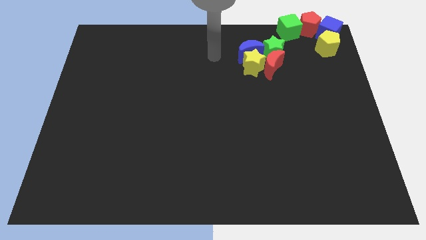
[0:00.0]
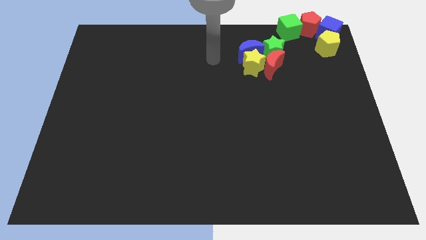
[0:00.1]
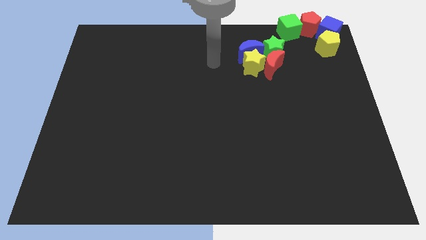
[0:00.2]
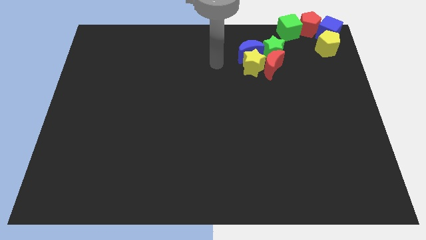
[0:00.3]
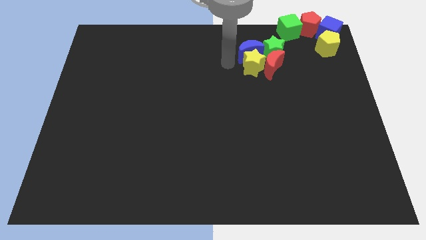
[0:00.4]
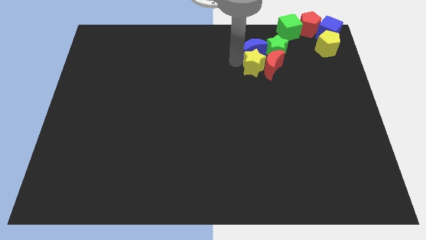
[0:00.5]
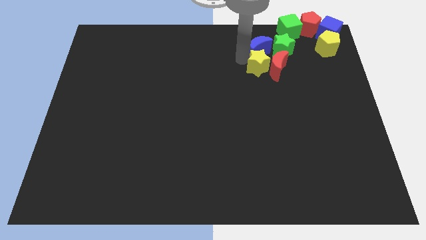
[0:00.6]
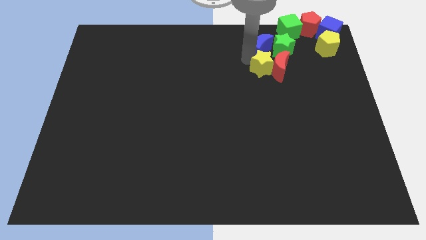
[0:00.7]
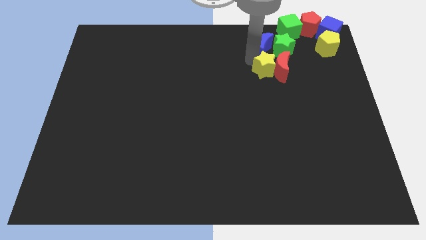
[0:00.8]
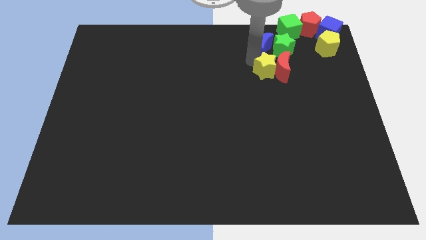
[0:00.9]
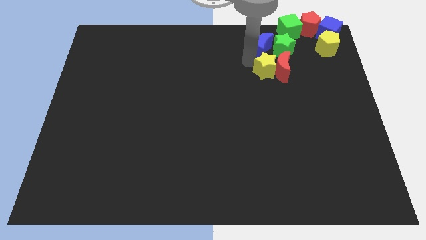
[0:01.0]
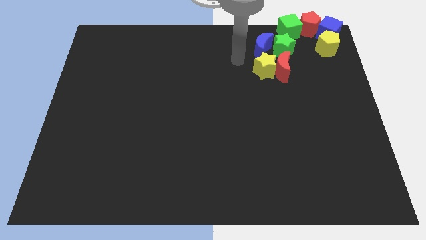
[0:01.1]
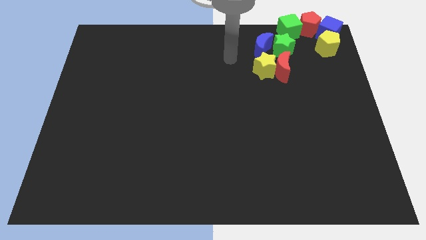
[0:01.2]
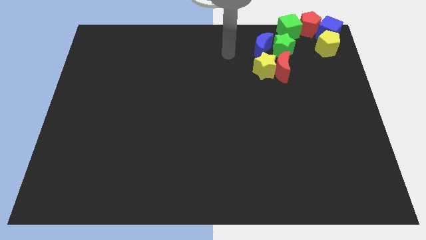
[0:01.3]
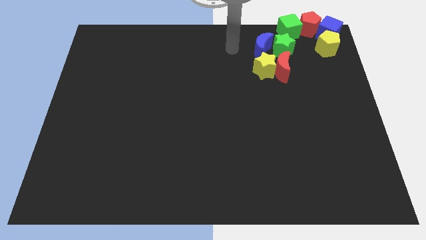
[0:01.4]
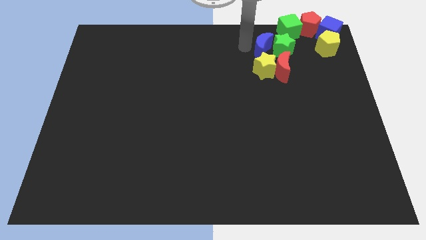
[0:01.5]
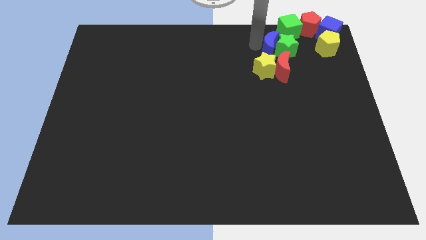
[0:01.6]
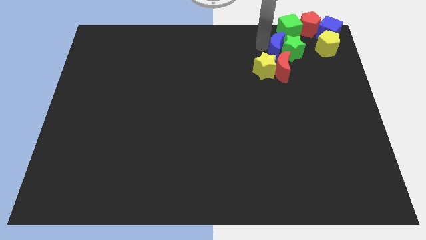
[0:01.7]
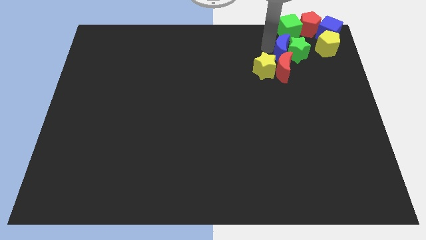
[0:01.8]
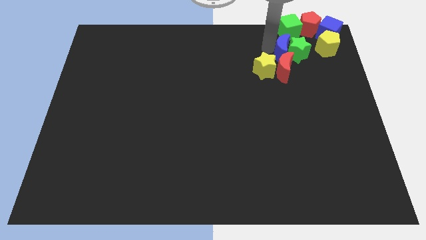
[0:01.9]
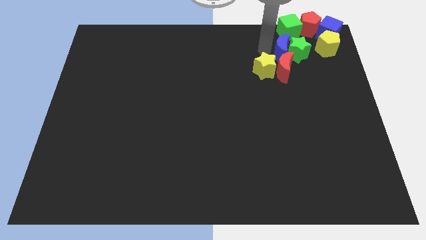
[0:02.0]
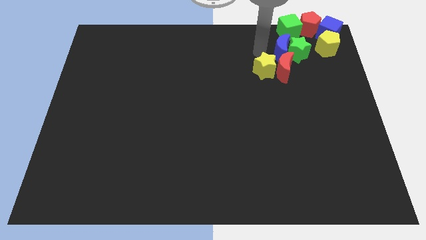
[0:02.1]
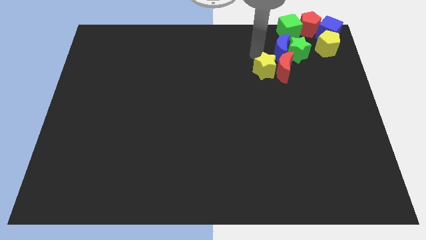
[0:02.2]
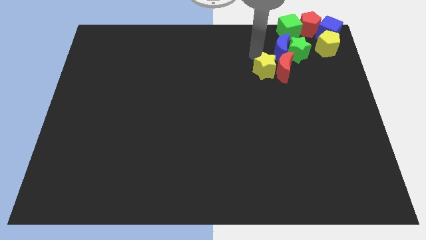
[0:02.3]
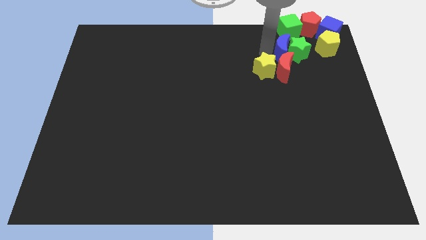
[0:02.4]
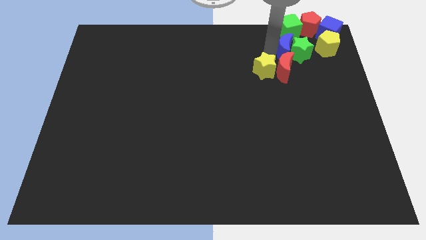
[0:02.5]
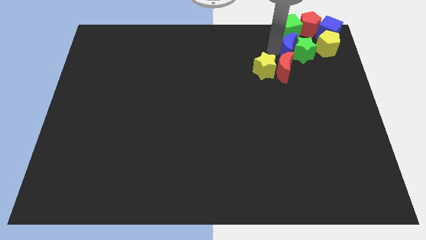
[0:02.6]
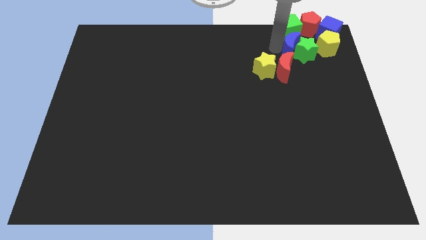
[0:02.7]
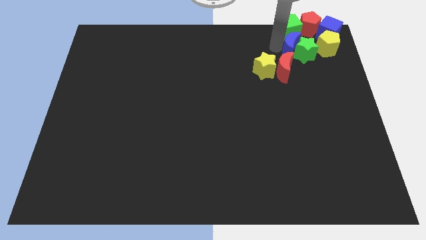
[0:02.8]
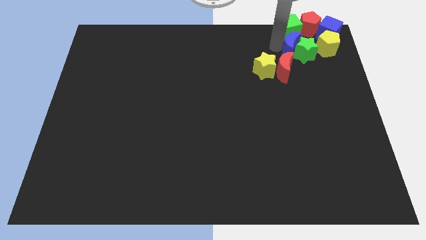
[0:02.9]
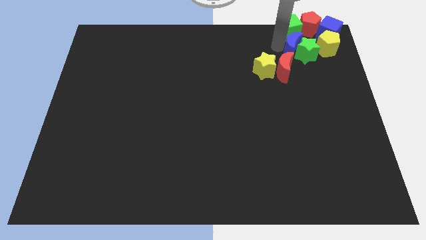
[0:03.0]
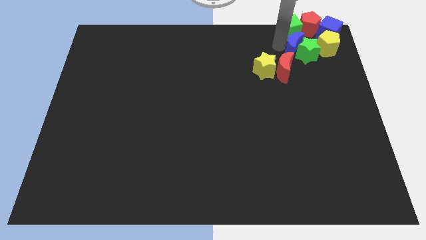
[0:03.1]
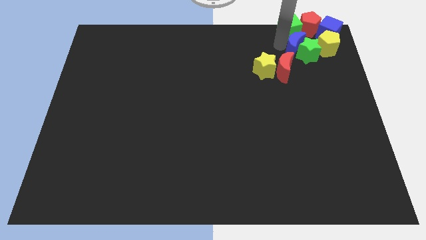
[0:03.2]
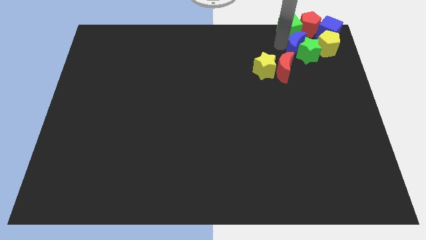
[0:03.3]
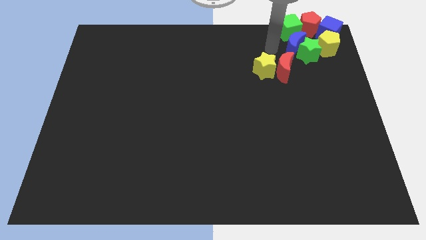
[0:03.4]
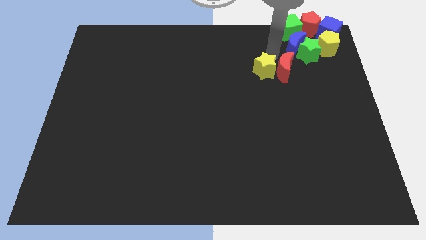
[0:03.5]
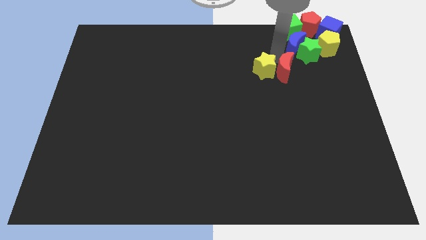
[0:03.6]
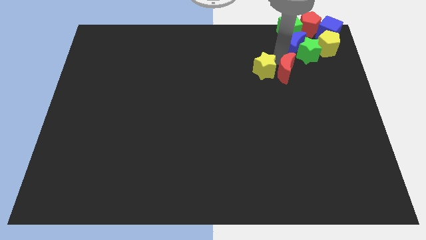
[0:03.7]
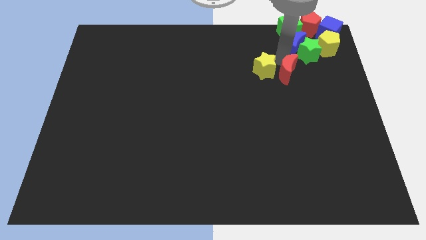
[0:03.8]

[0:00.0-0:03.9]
push the blue moon to the right along with green star

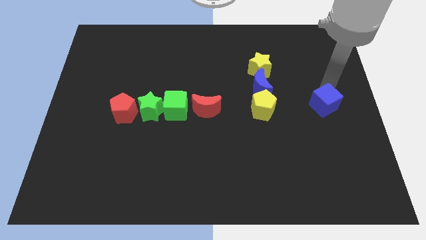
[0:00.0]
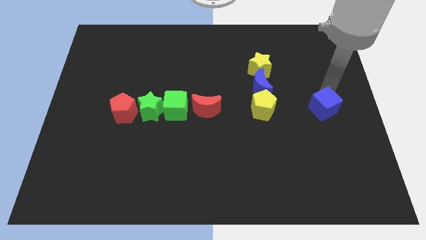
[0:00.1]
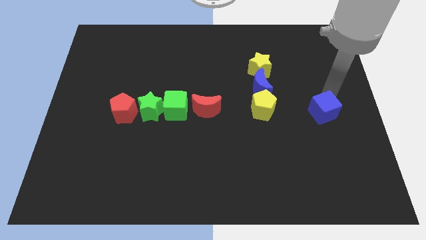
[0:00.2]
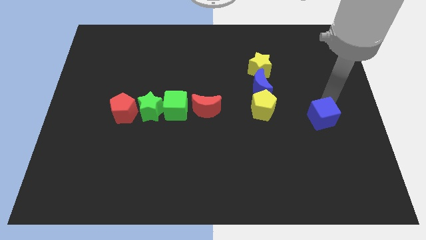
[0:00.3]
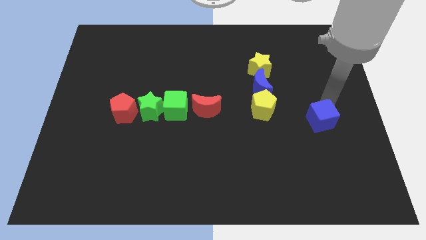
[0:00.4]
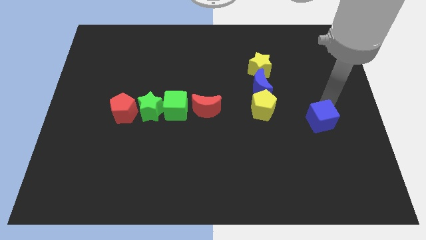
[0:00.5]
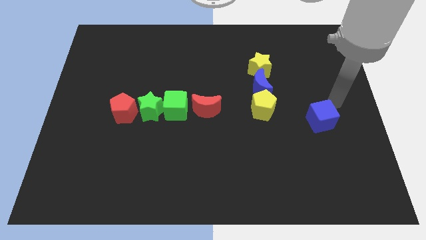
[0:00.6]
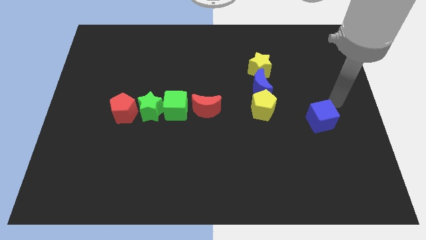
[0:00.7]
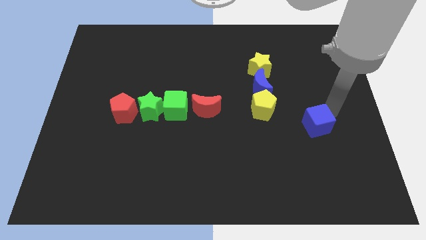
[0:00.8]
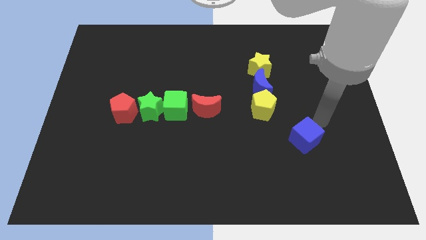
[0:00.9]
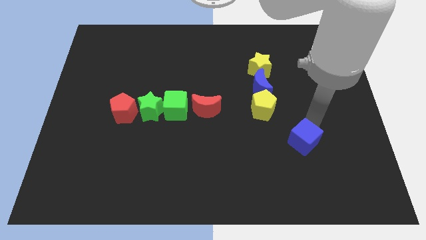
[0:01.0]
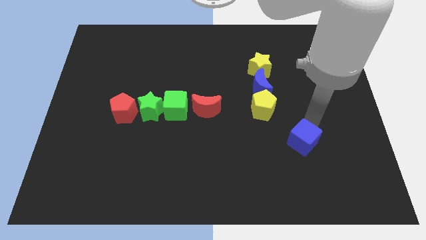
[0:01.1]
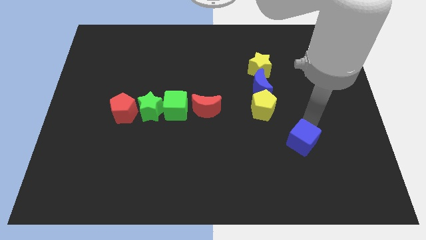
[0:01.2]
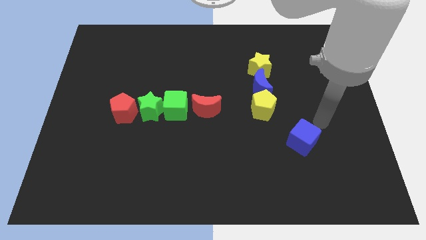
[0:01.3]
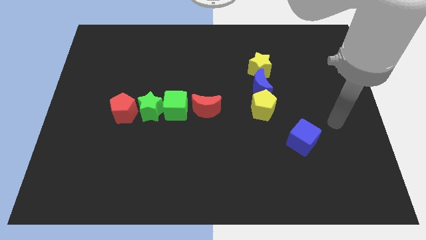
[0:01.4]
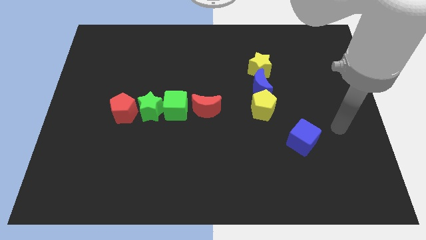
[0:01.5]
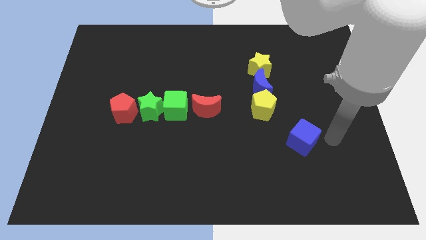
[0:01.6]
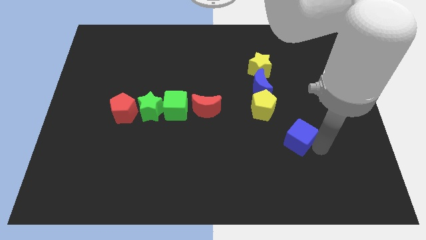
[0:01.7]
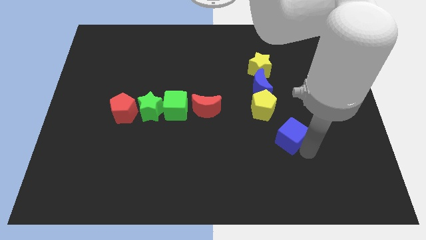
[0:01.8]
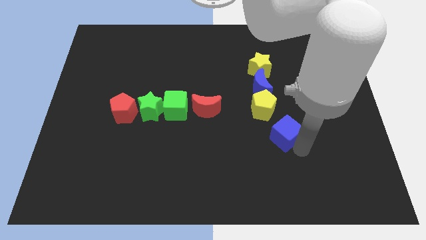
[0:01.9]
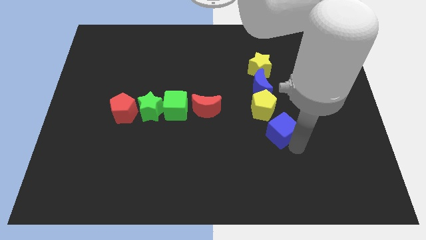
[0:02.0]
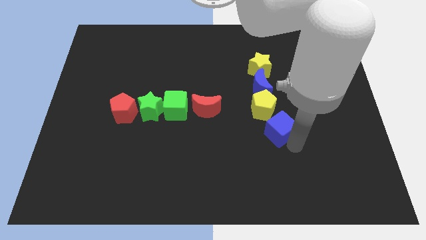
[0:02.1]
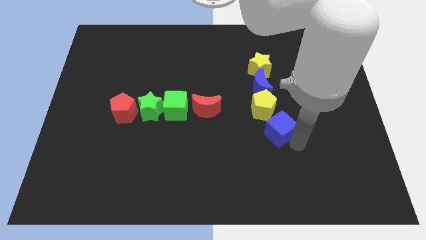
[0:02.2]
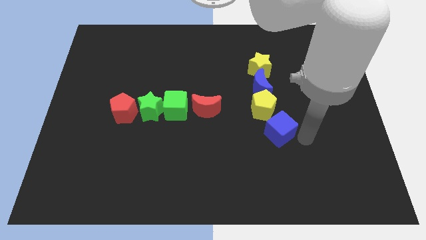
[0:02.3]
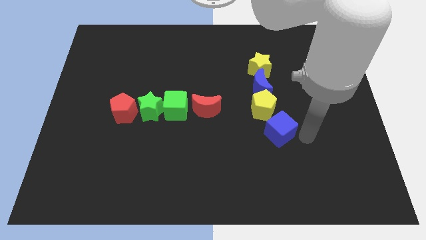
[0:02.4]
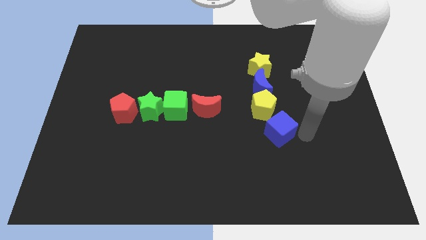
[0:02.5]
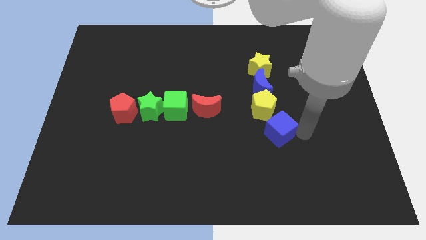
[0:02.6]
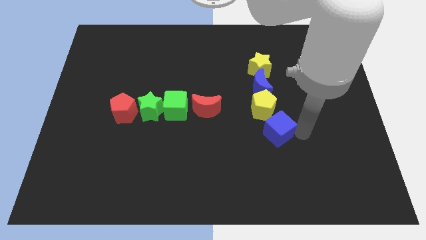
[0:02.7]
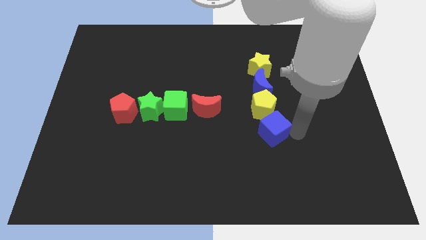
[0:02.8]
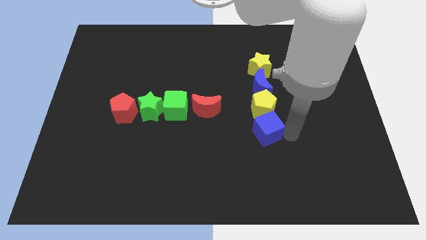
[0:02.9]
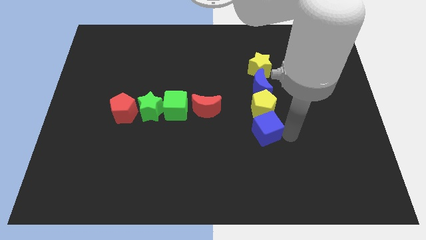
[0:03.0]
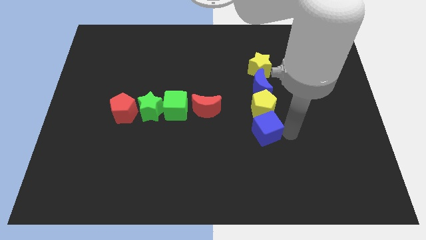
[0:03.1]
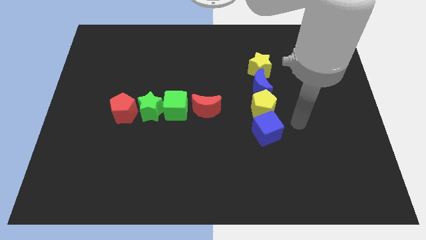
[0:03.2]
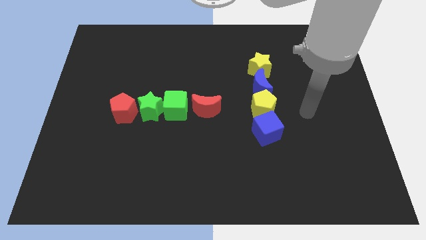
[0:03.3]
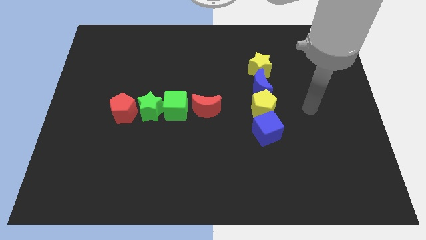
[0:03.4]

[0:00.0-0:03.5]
place blue cube to the bottom of yellow pentagon

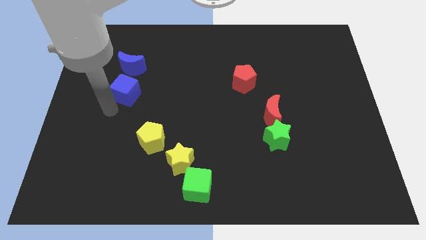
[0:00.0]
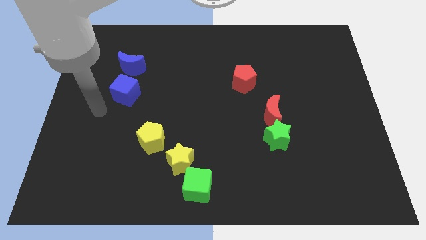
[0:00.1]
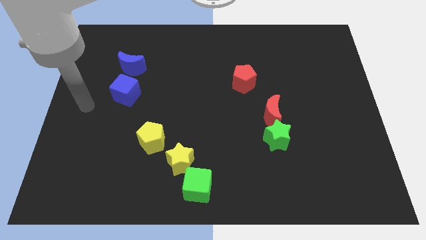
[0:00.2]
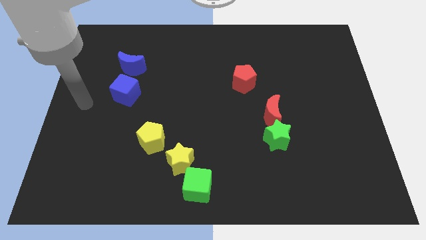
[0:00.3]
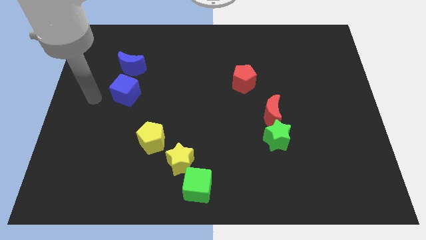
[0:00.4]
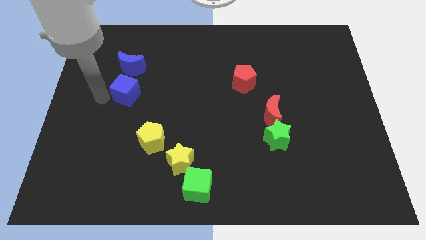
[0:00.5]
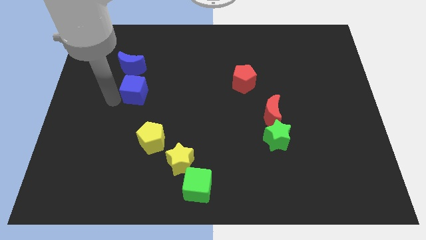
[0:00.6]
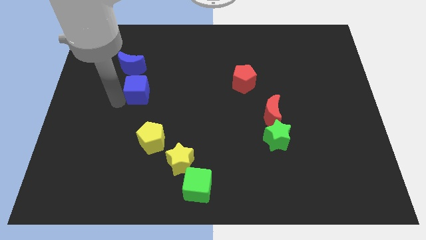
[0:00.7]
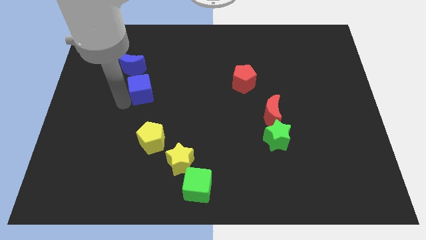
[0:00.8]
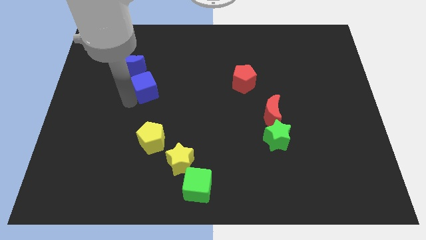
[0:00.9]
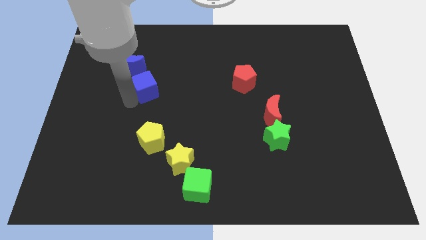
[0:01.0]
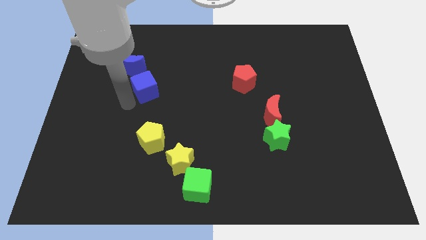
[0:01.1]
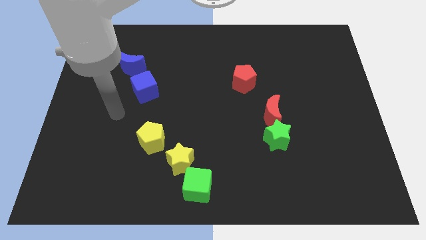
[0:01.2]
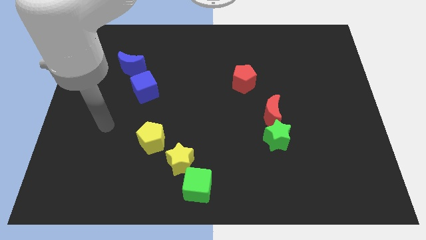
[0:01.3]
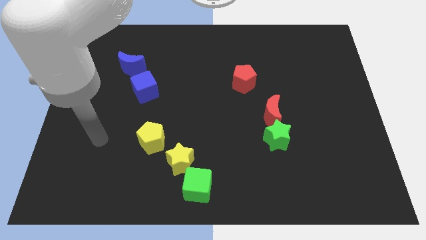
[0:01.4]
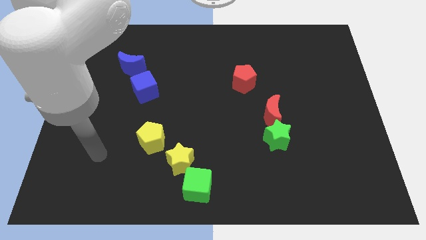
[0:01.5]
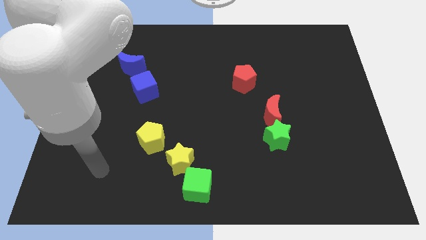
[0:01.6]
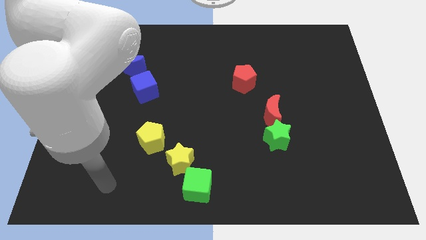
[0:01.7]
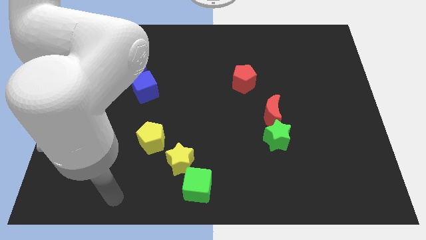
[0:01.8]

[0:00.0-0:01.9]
slide the blue cube slightly to the right
